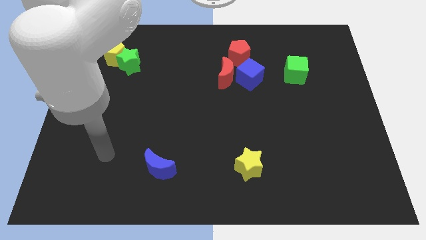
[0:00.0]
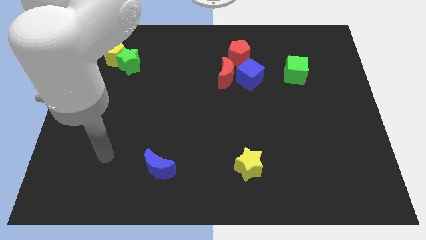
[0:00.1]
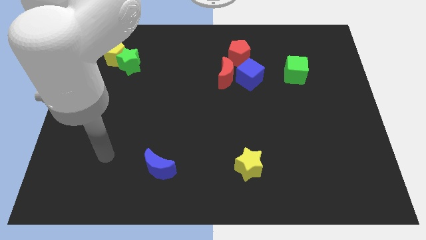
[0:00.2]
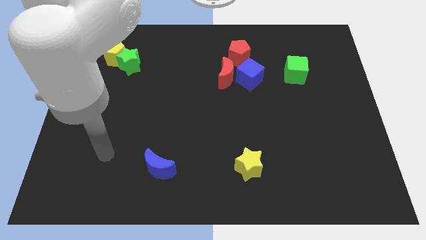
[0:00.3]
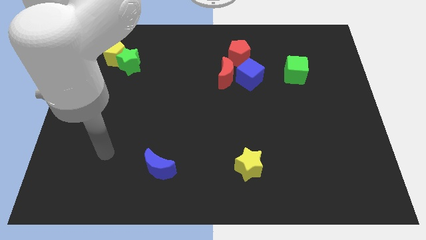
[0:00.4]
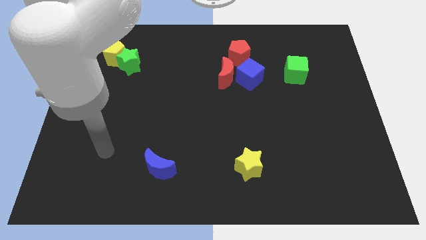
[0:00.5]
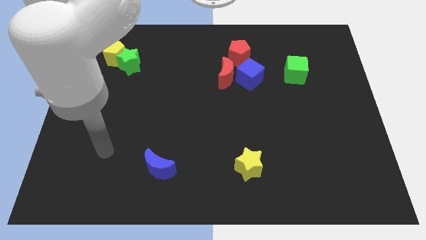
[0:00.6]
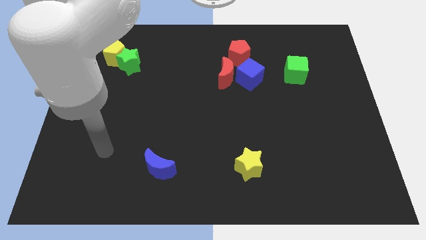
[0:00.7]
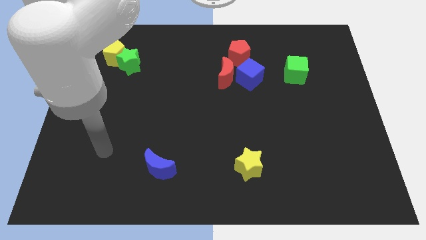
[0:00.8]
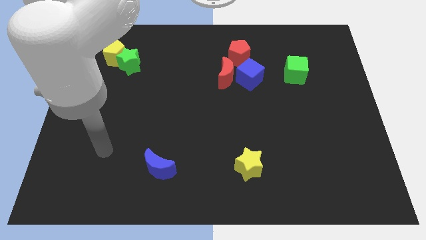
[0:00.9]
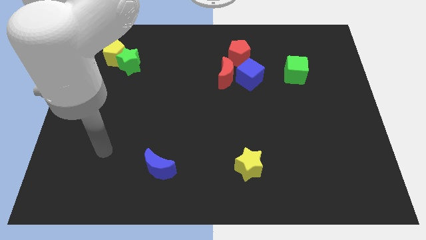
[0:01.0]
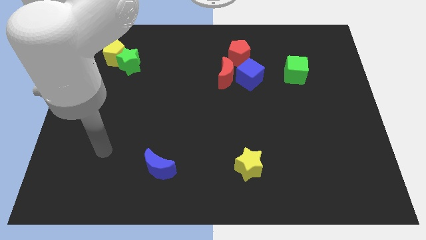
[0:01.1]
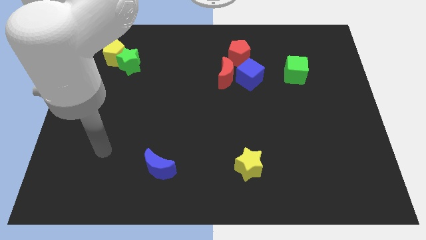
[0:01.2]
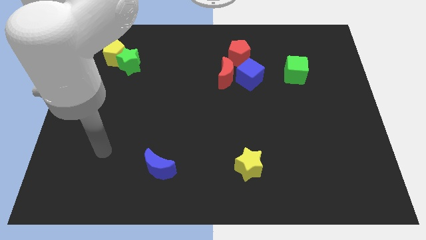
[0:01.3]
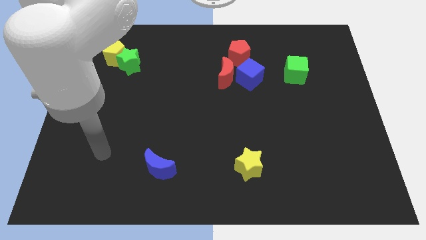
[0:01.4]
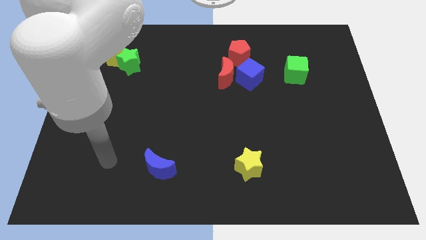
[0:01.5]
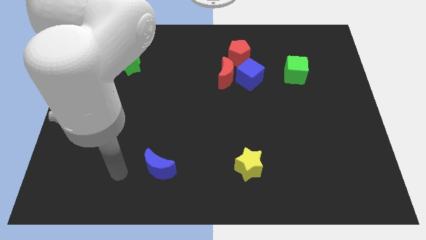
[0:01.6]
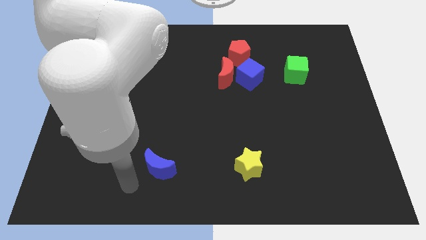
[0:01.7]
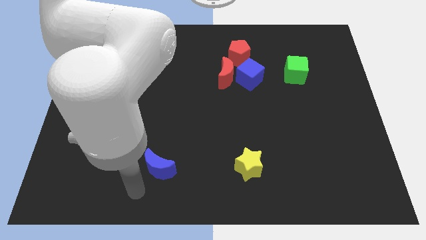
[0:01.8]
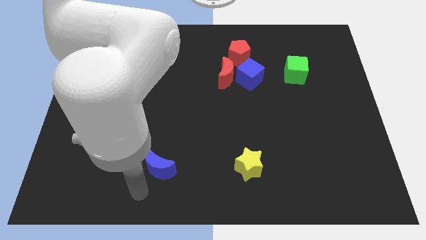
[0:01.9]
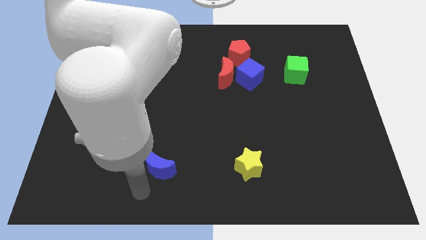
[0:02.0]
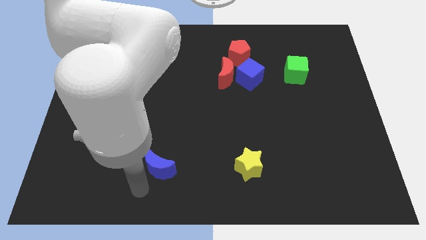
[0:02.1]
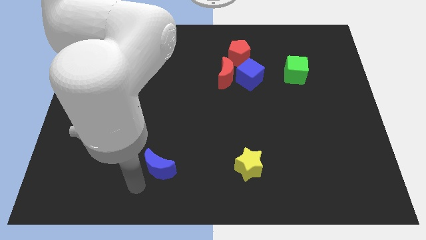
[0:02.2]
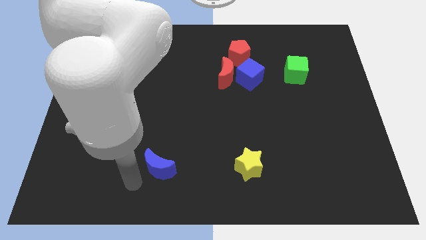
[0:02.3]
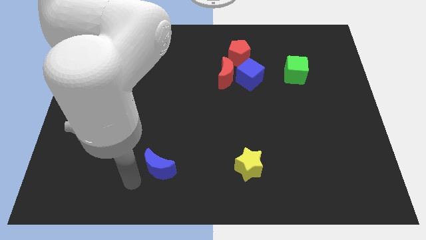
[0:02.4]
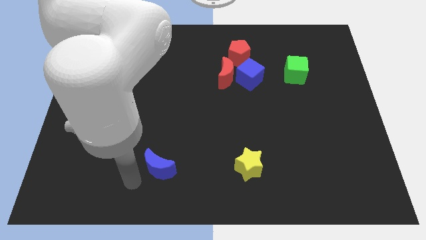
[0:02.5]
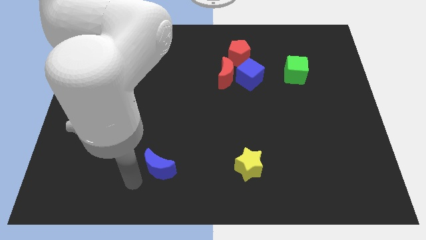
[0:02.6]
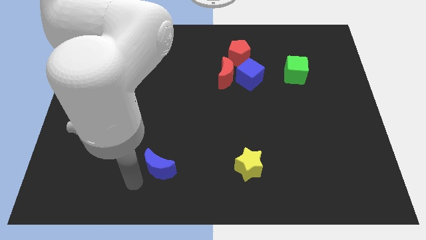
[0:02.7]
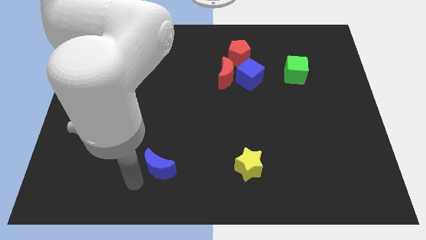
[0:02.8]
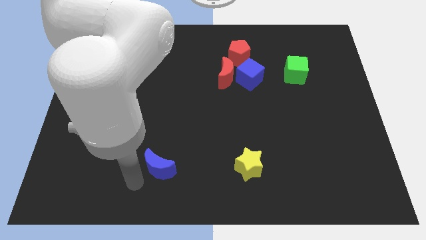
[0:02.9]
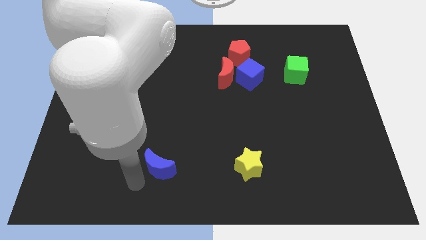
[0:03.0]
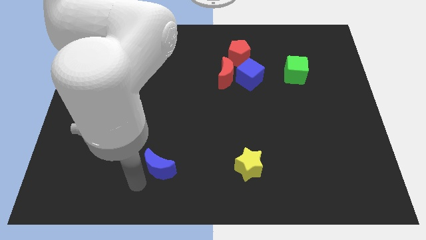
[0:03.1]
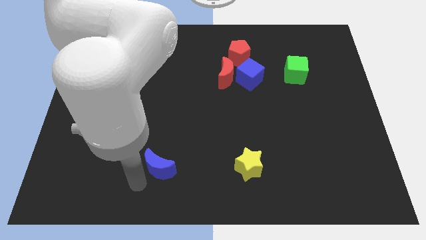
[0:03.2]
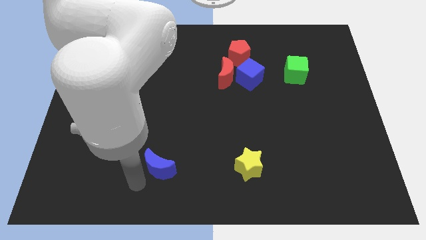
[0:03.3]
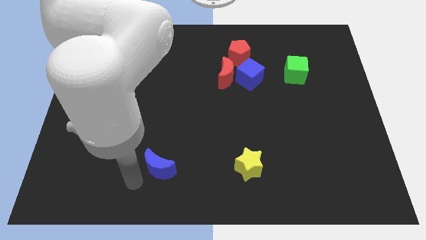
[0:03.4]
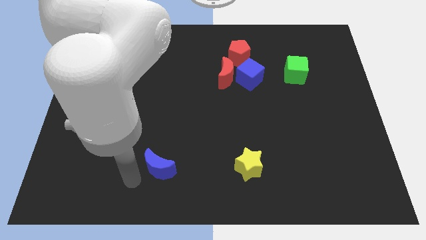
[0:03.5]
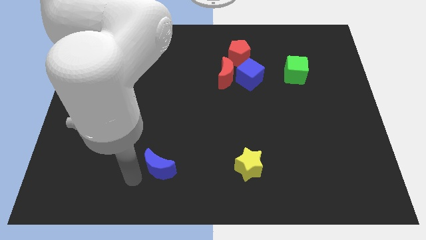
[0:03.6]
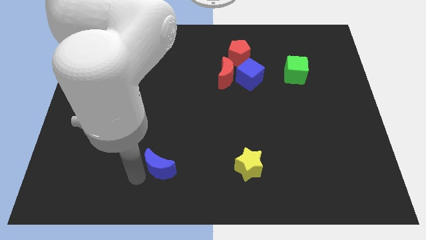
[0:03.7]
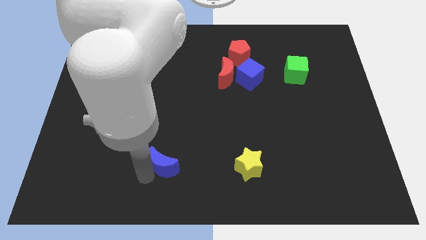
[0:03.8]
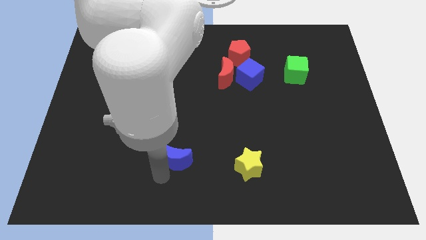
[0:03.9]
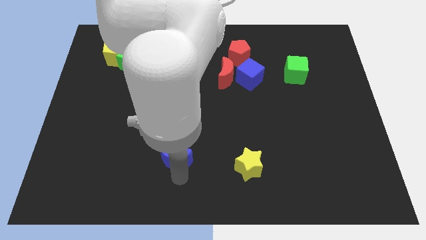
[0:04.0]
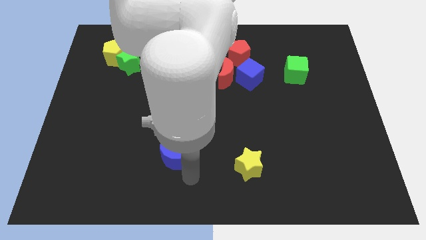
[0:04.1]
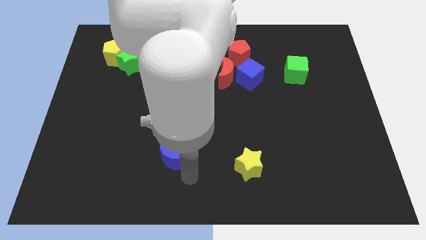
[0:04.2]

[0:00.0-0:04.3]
push the blue crescent slightly up

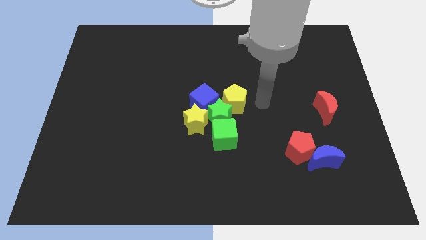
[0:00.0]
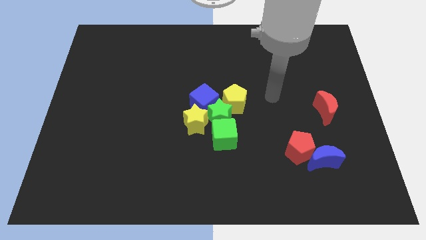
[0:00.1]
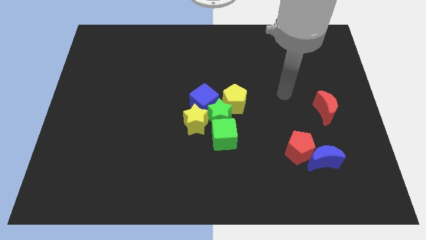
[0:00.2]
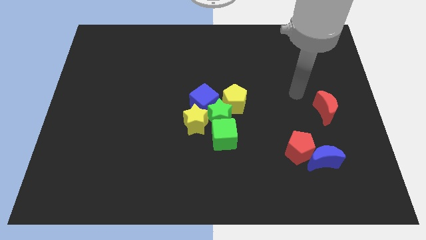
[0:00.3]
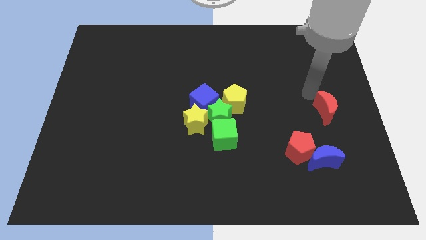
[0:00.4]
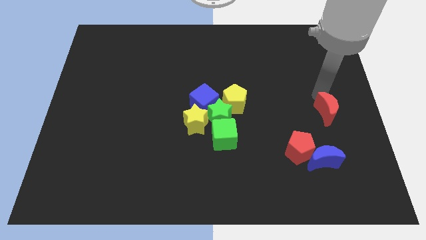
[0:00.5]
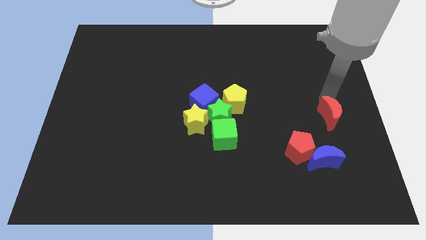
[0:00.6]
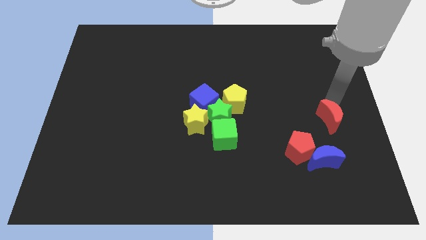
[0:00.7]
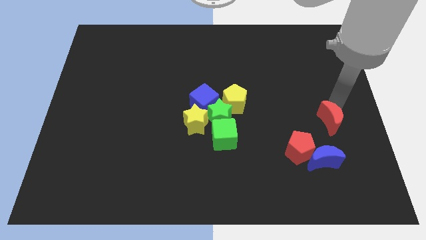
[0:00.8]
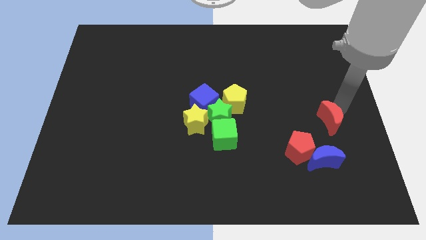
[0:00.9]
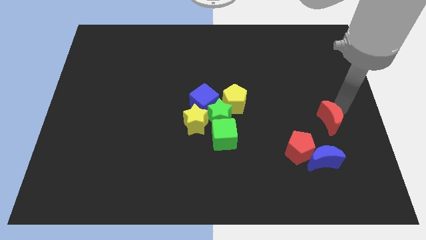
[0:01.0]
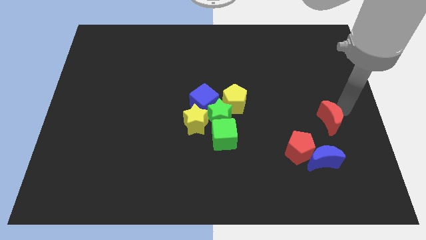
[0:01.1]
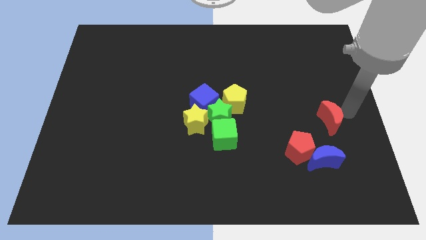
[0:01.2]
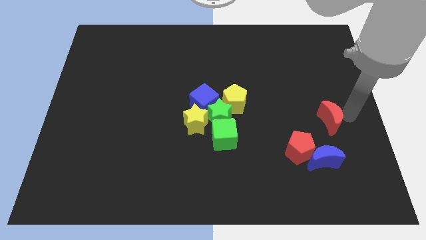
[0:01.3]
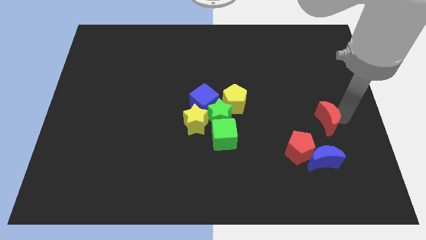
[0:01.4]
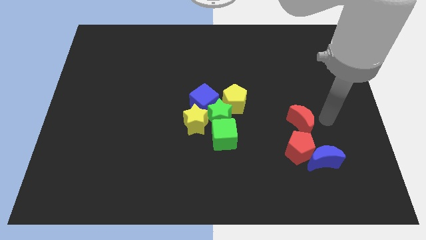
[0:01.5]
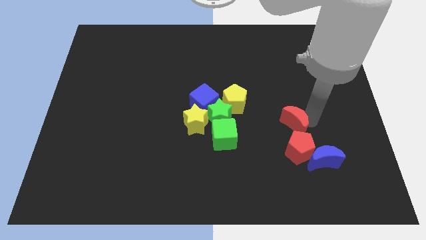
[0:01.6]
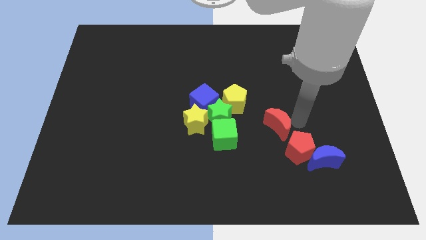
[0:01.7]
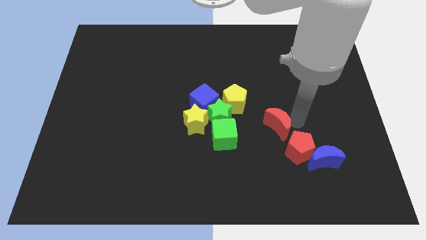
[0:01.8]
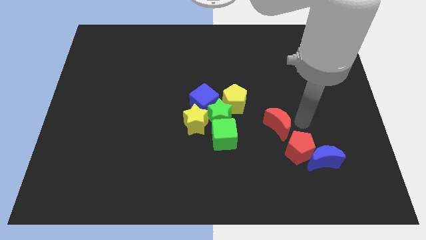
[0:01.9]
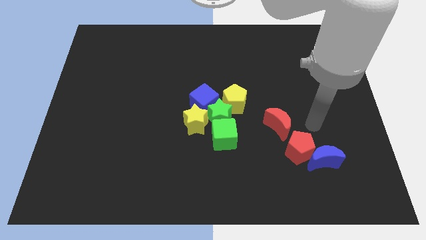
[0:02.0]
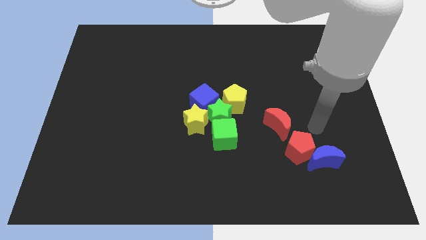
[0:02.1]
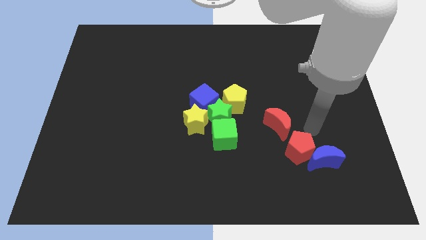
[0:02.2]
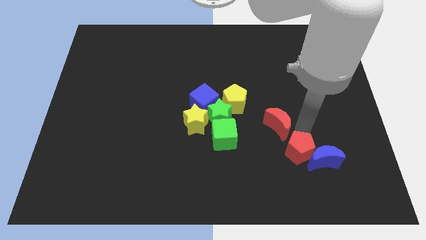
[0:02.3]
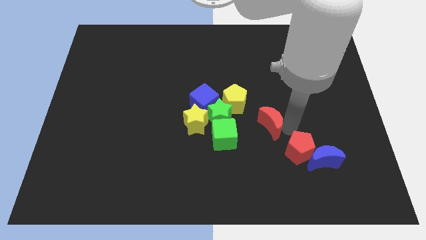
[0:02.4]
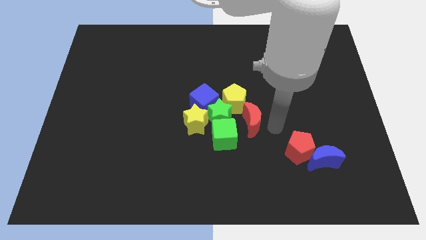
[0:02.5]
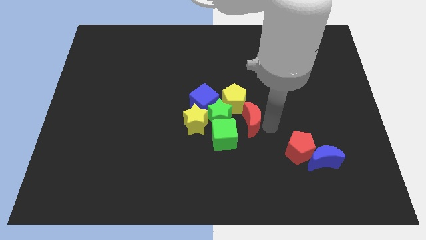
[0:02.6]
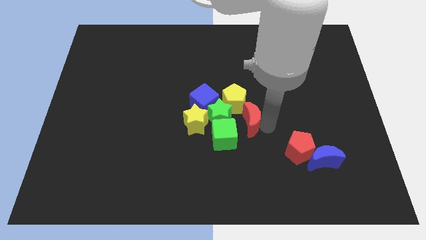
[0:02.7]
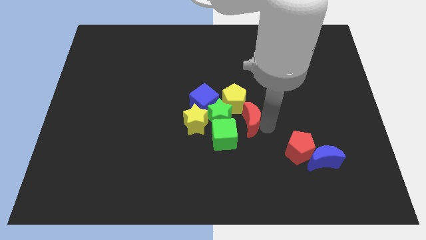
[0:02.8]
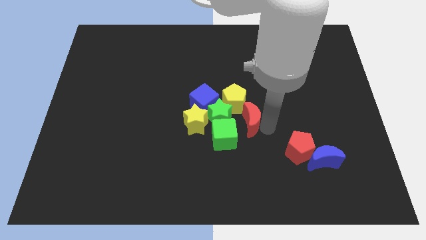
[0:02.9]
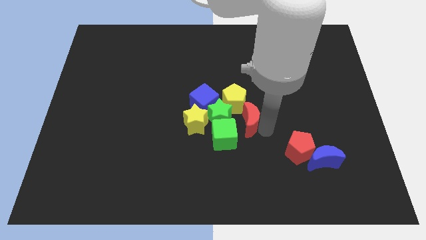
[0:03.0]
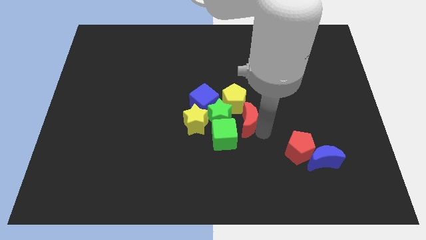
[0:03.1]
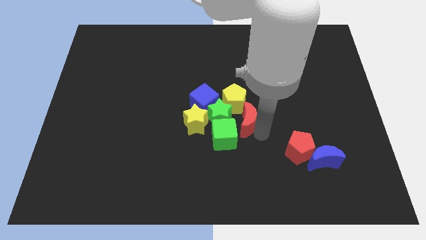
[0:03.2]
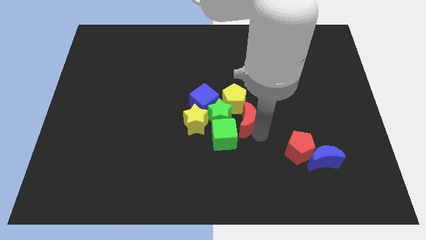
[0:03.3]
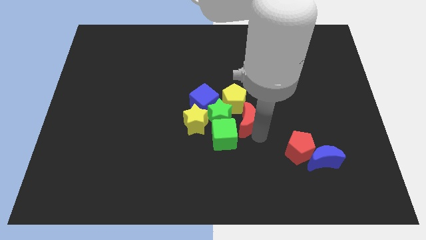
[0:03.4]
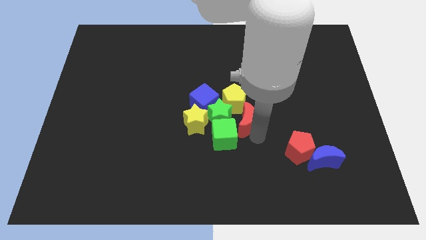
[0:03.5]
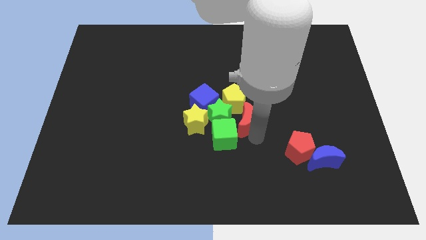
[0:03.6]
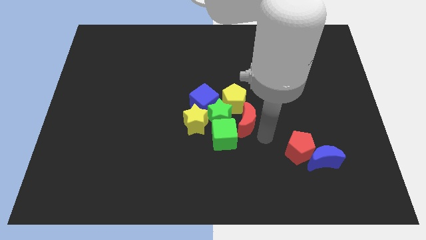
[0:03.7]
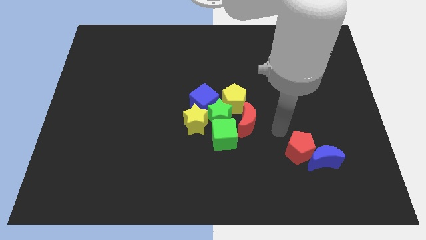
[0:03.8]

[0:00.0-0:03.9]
move the red moon into the group of blocks

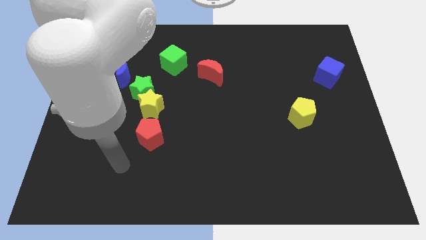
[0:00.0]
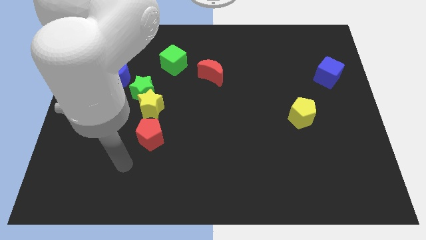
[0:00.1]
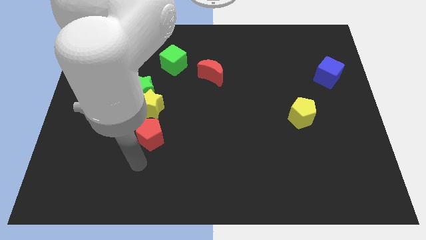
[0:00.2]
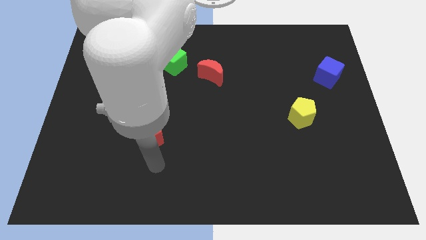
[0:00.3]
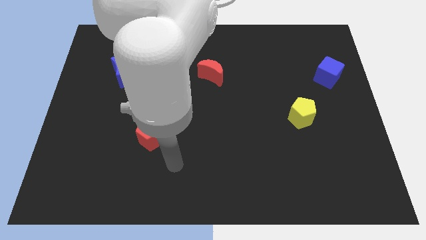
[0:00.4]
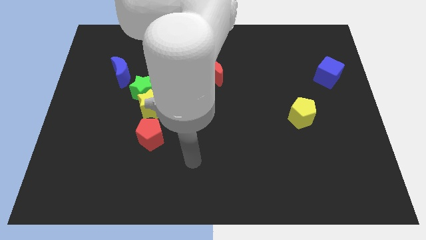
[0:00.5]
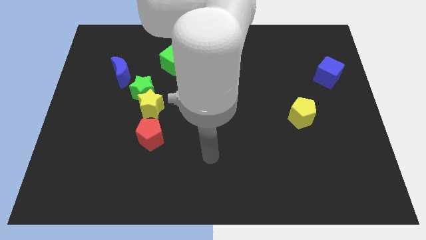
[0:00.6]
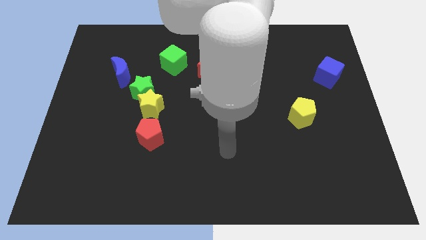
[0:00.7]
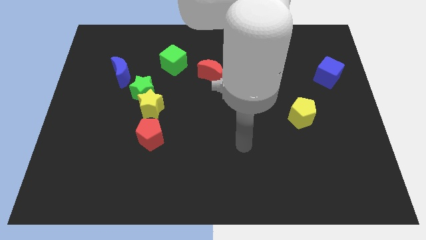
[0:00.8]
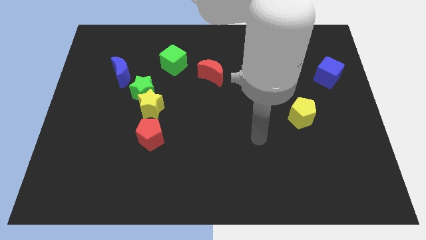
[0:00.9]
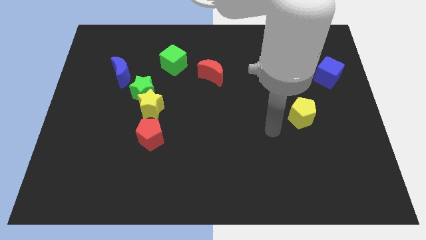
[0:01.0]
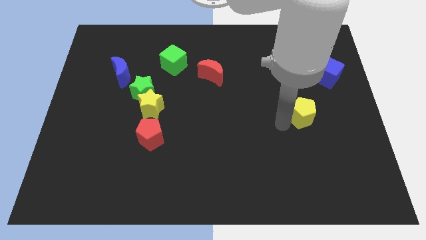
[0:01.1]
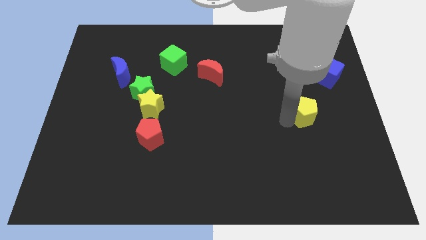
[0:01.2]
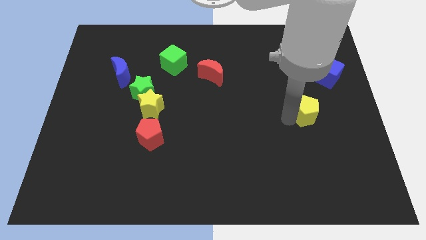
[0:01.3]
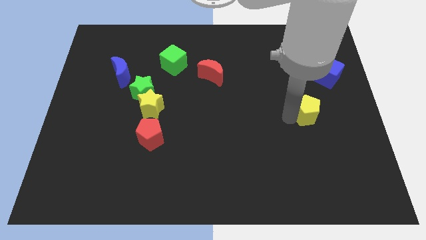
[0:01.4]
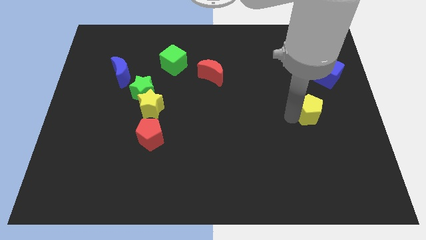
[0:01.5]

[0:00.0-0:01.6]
move your hand towards the left of the yellow pentagon
